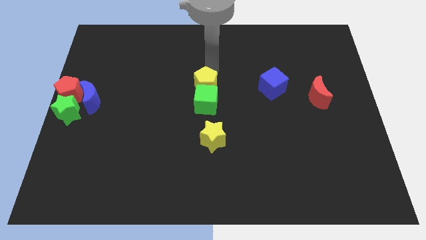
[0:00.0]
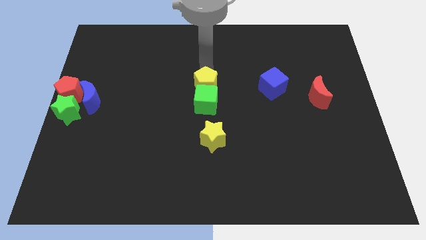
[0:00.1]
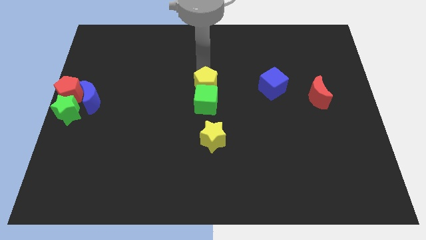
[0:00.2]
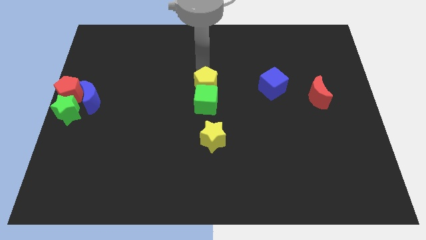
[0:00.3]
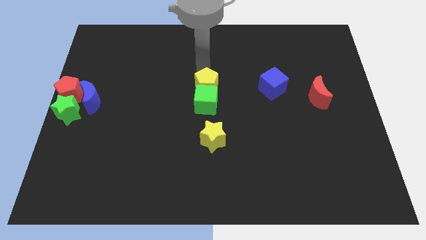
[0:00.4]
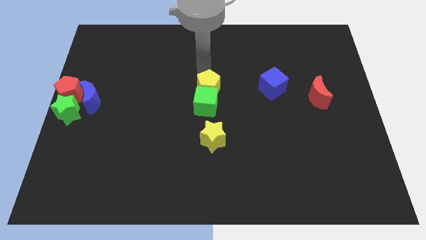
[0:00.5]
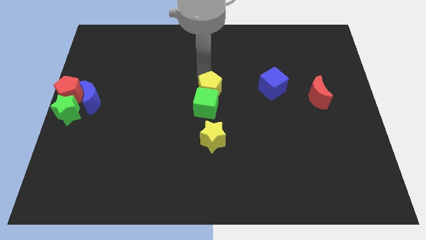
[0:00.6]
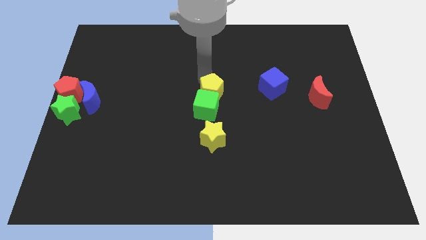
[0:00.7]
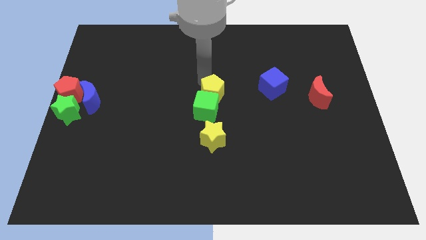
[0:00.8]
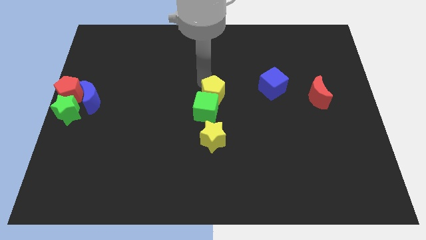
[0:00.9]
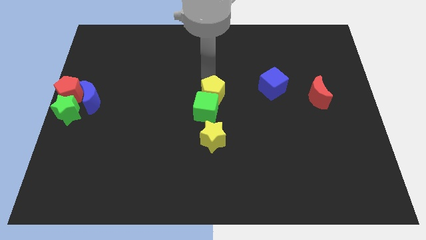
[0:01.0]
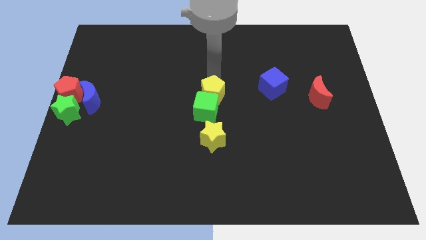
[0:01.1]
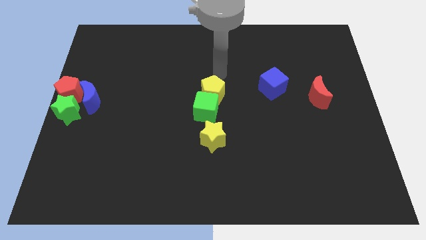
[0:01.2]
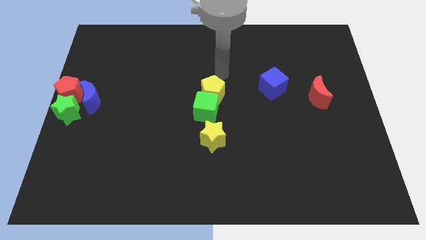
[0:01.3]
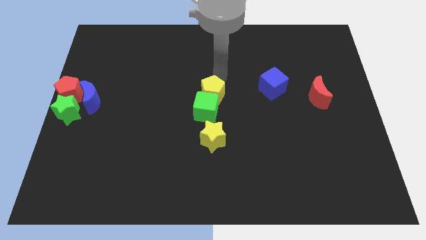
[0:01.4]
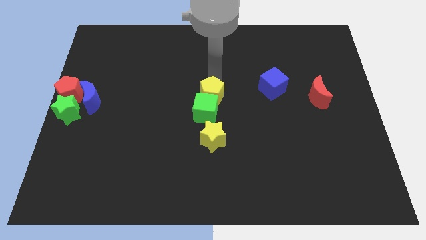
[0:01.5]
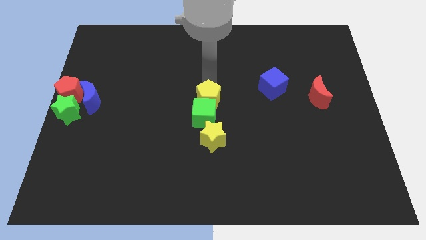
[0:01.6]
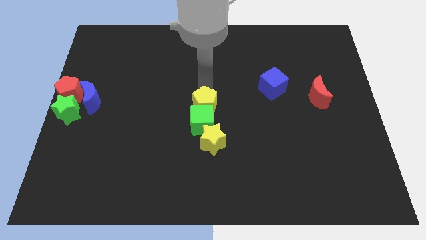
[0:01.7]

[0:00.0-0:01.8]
push the yellow pentagon into the green cube

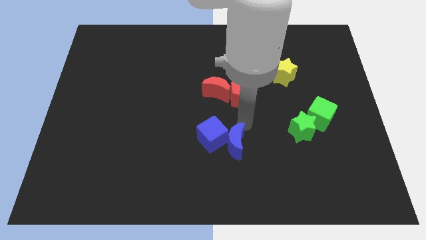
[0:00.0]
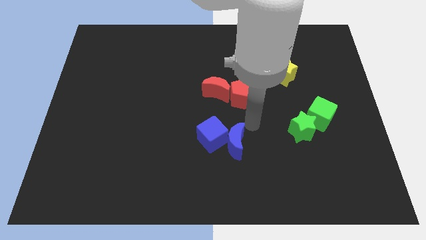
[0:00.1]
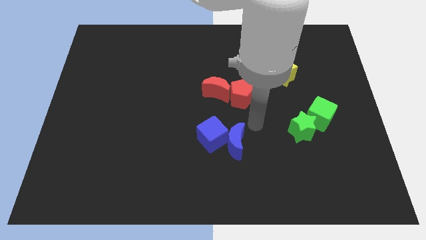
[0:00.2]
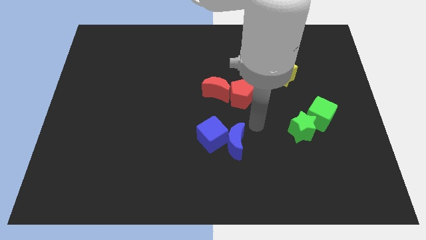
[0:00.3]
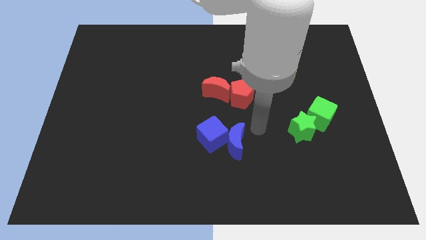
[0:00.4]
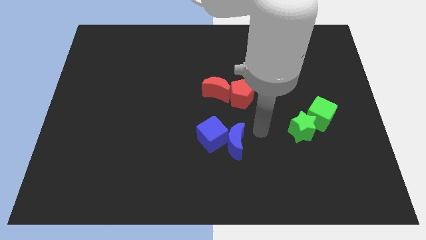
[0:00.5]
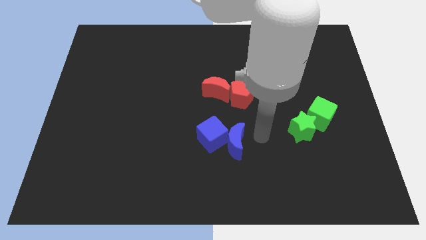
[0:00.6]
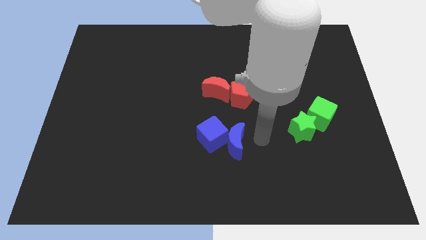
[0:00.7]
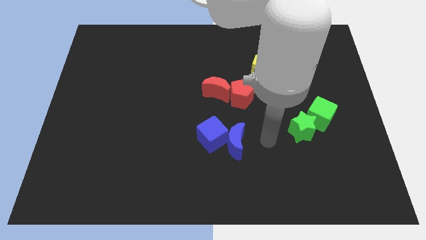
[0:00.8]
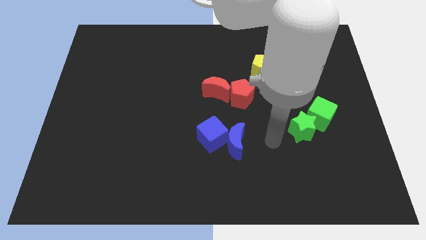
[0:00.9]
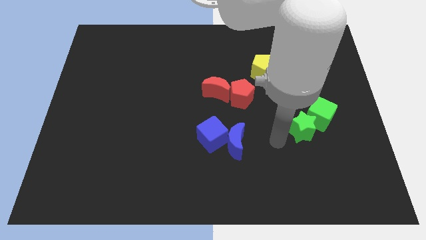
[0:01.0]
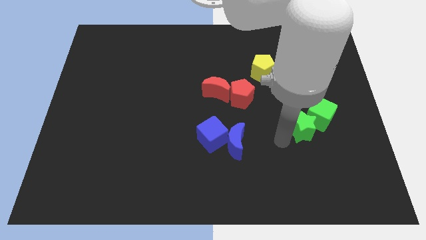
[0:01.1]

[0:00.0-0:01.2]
put your arm to the left side of green star

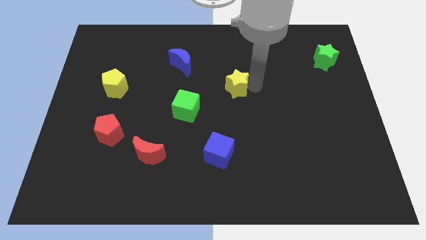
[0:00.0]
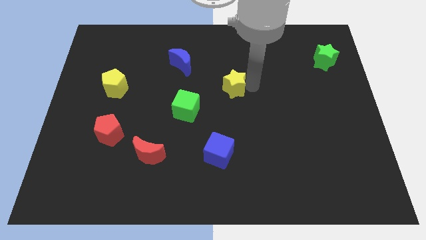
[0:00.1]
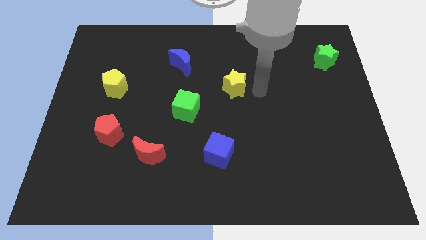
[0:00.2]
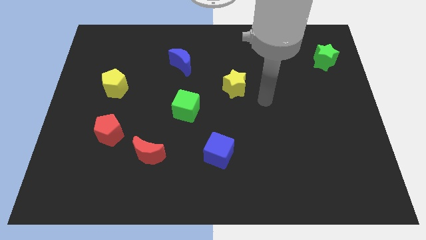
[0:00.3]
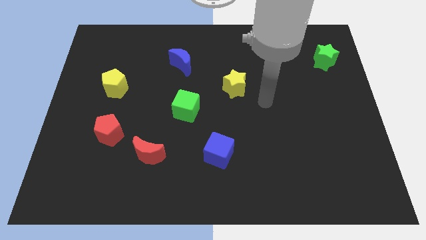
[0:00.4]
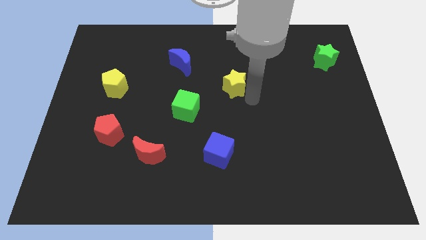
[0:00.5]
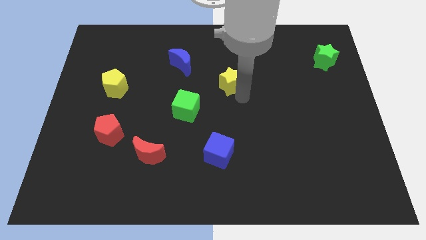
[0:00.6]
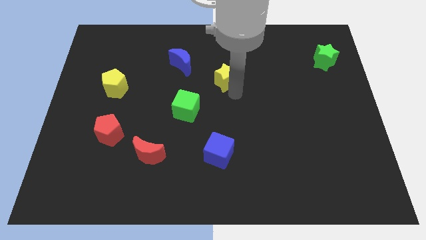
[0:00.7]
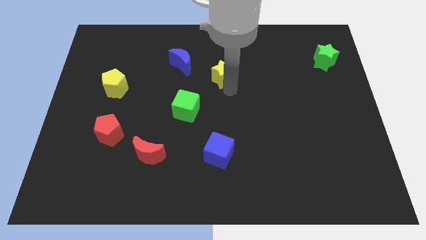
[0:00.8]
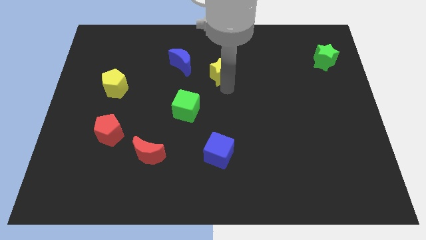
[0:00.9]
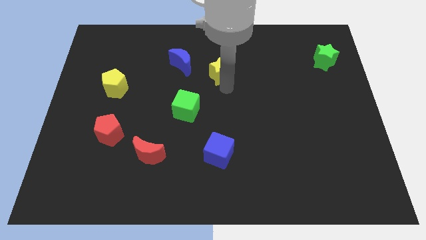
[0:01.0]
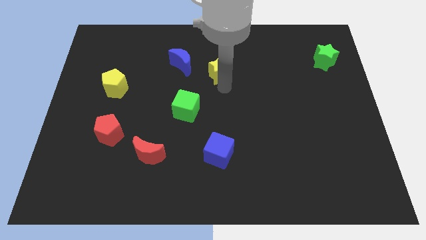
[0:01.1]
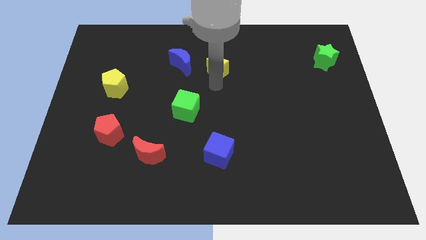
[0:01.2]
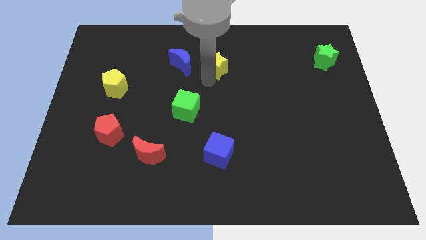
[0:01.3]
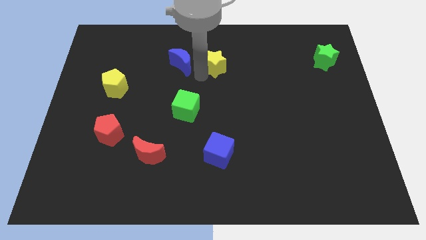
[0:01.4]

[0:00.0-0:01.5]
place the yellow star right to the blue moon

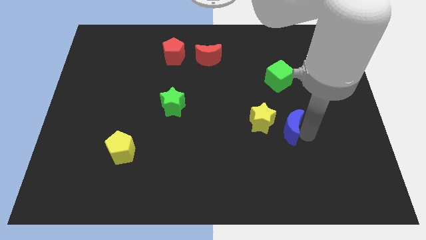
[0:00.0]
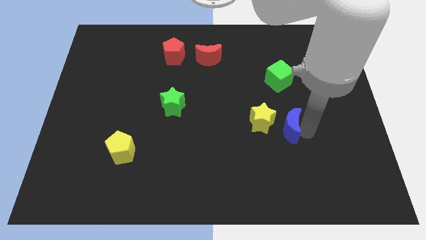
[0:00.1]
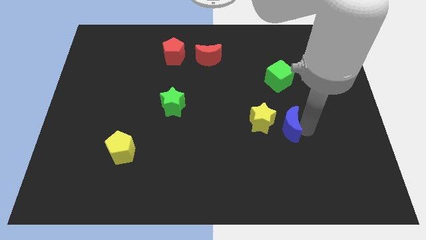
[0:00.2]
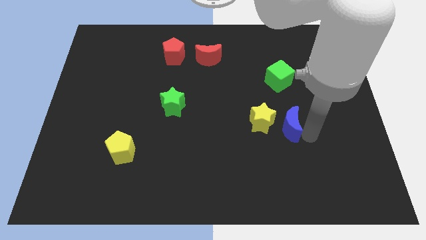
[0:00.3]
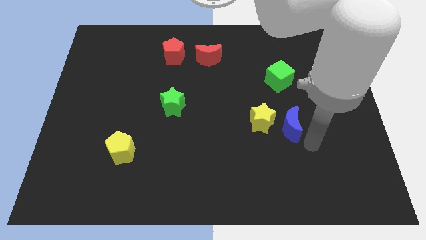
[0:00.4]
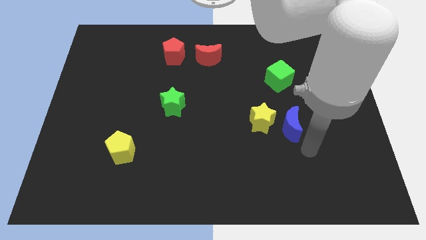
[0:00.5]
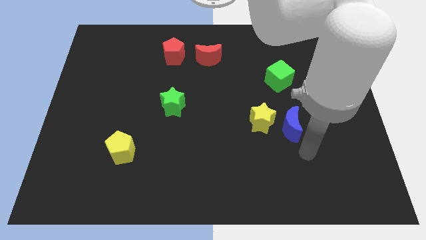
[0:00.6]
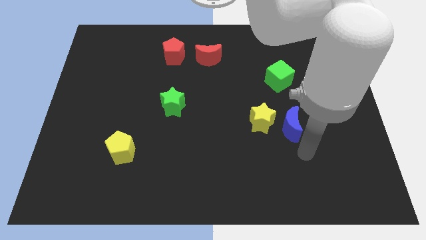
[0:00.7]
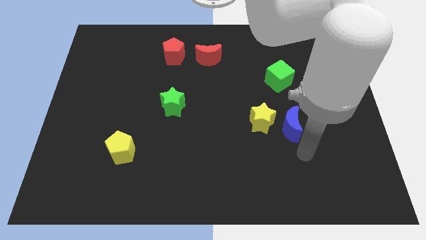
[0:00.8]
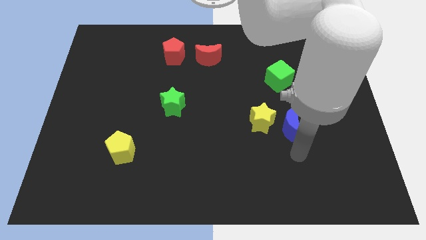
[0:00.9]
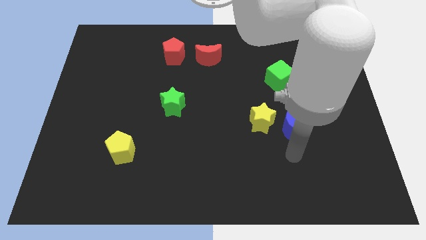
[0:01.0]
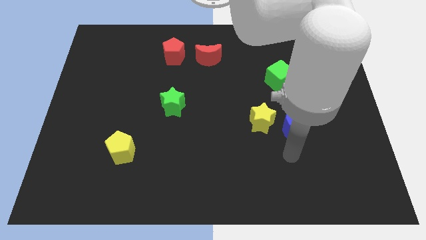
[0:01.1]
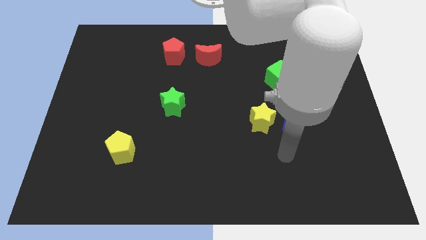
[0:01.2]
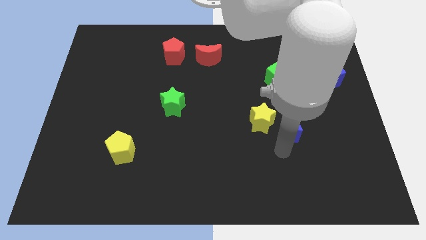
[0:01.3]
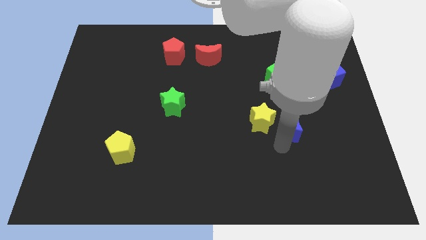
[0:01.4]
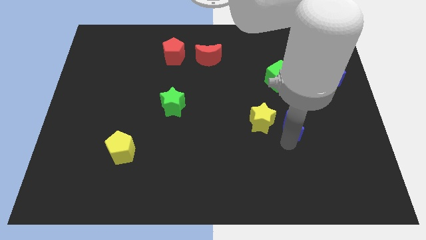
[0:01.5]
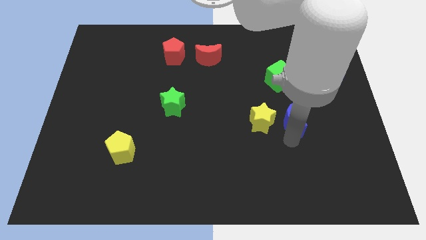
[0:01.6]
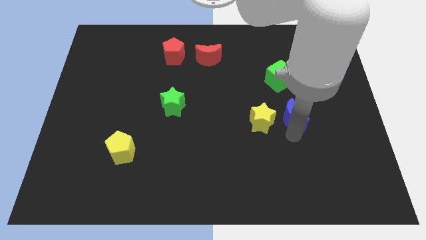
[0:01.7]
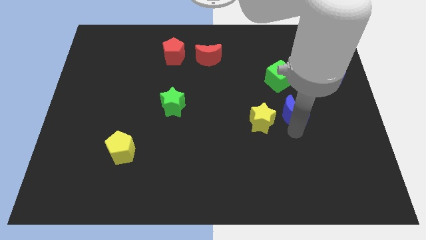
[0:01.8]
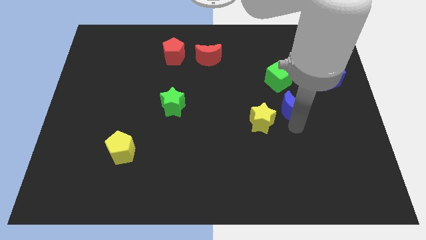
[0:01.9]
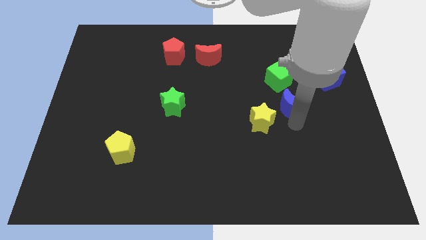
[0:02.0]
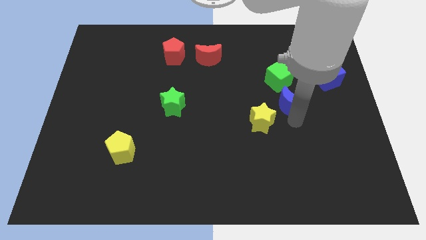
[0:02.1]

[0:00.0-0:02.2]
place the blue moon in between the yellow star and blue cube

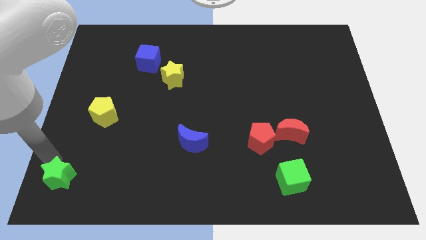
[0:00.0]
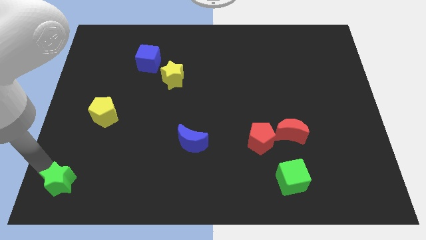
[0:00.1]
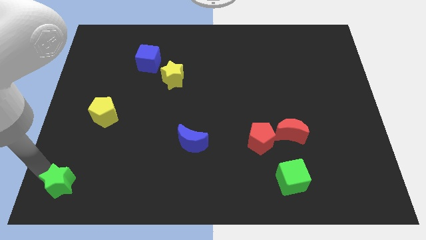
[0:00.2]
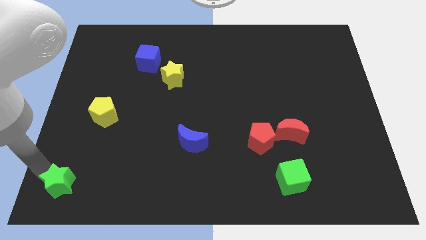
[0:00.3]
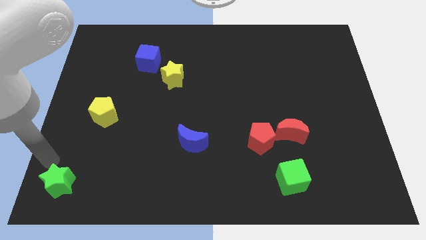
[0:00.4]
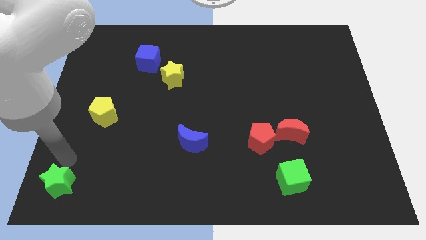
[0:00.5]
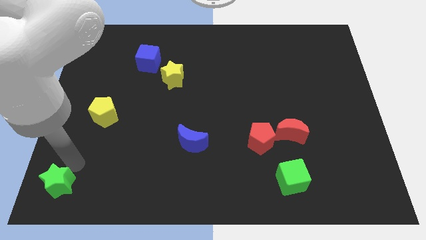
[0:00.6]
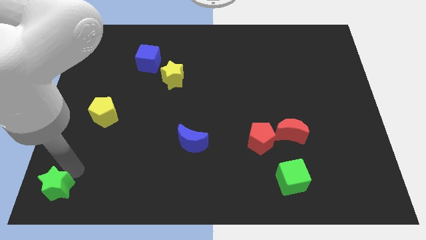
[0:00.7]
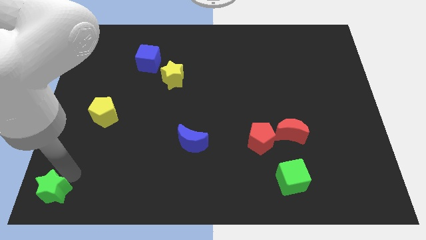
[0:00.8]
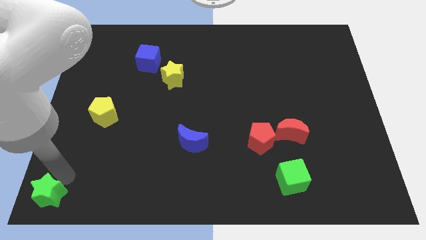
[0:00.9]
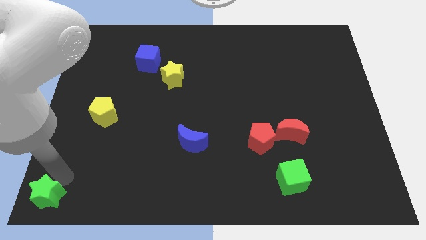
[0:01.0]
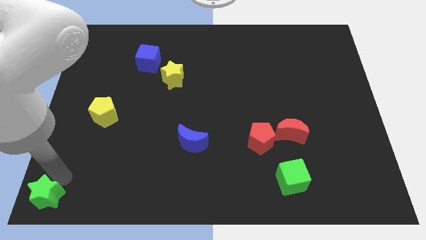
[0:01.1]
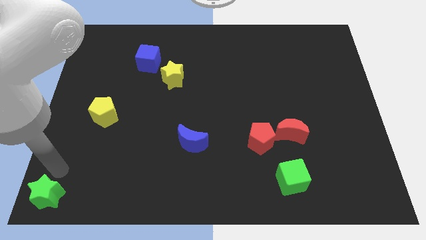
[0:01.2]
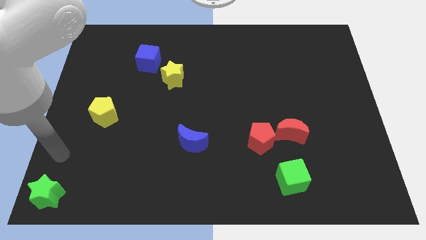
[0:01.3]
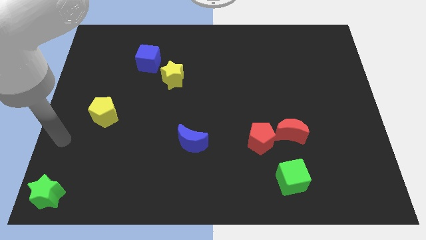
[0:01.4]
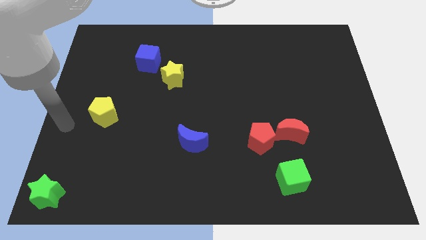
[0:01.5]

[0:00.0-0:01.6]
place the green star at the bottom left corner of the board

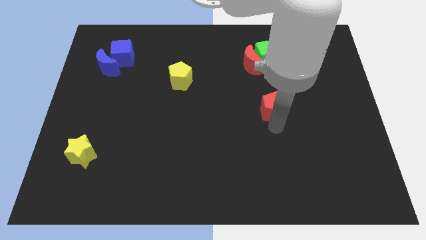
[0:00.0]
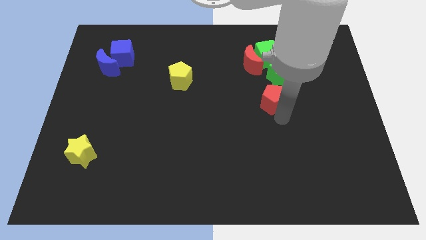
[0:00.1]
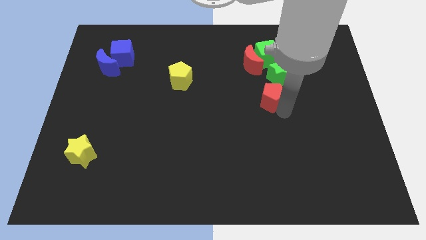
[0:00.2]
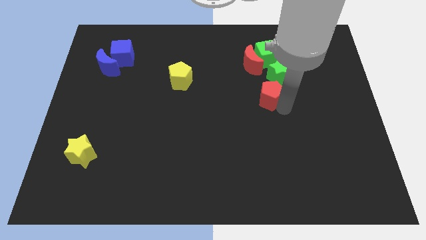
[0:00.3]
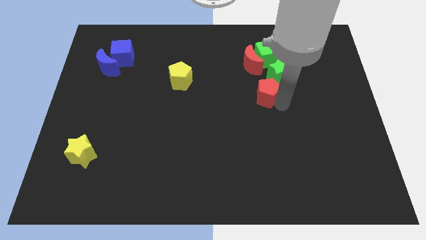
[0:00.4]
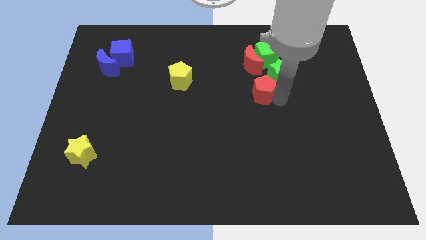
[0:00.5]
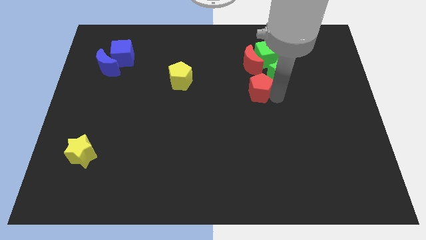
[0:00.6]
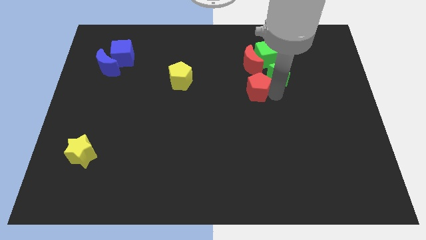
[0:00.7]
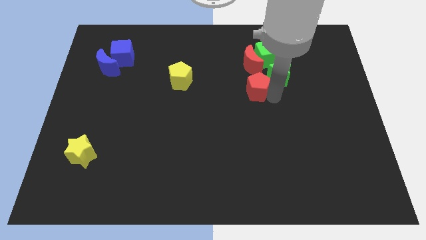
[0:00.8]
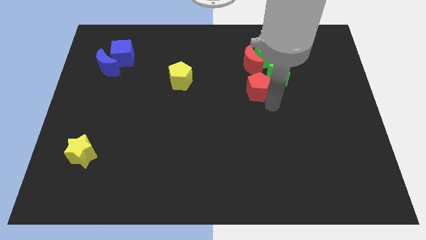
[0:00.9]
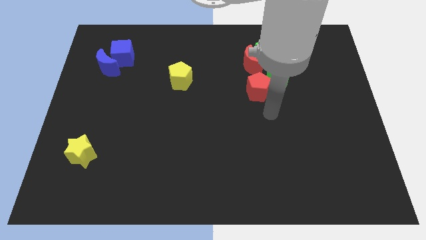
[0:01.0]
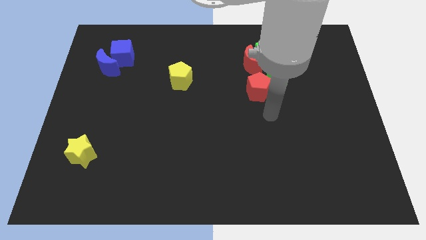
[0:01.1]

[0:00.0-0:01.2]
place the red pentagon left to the green star
